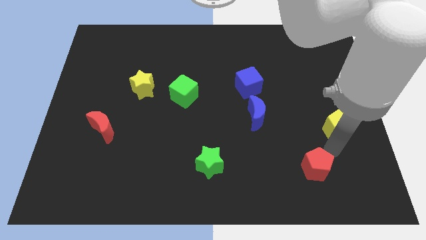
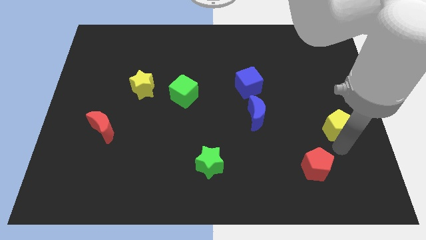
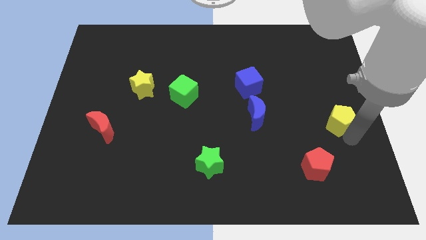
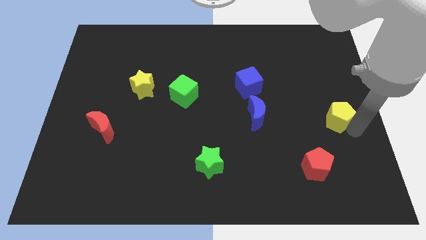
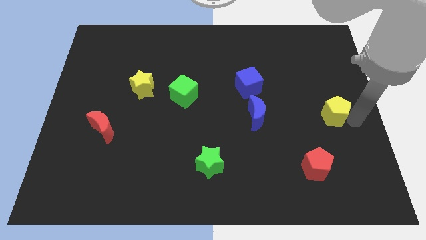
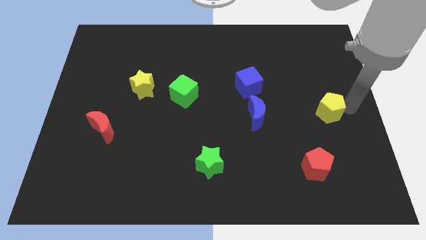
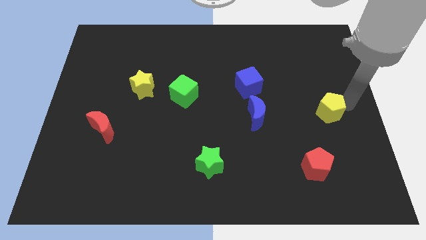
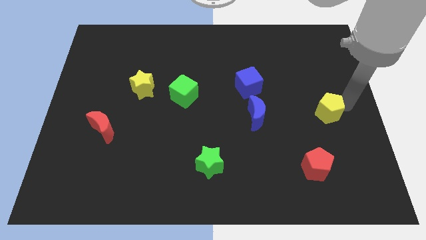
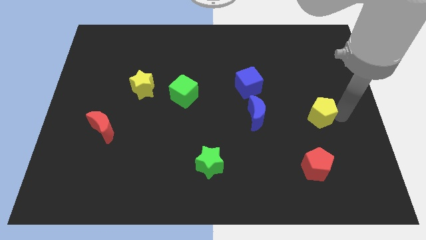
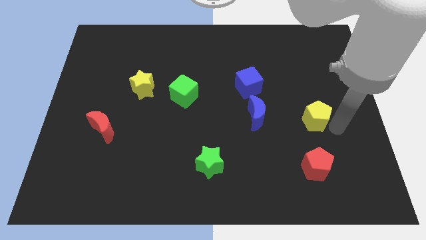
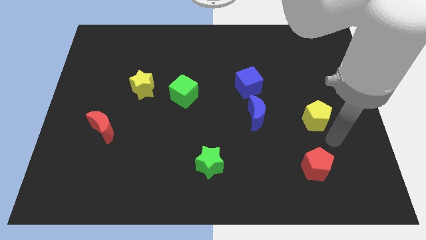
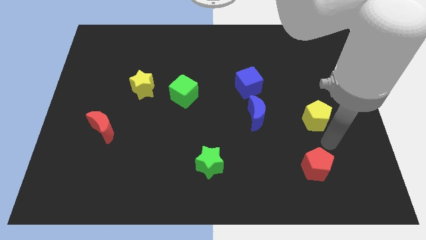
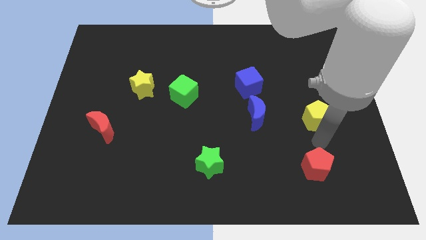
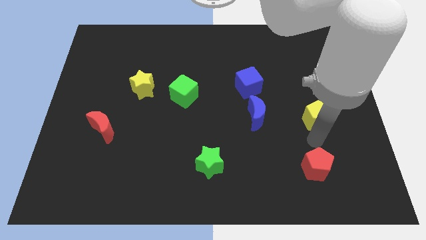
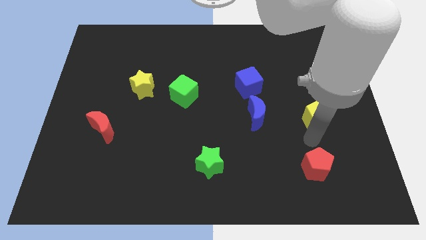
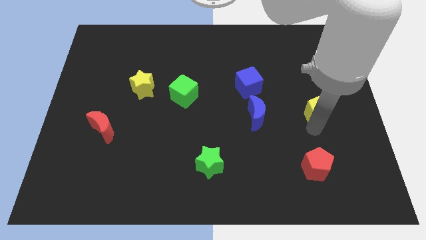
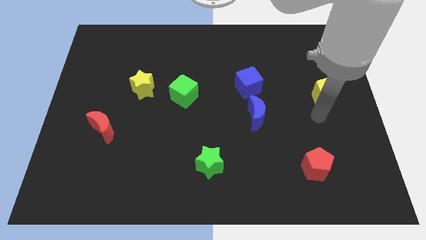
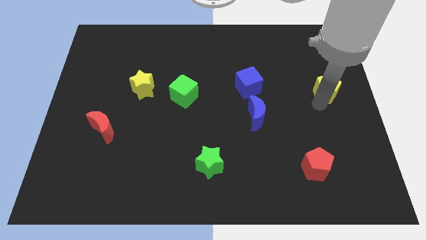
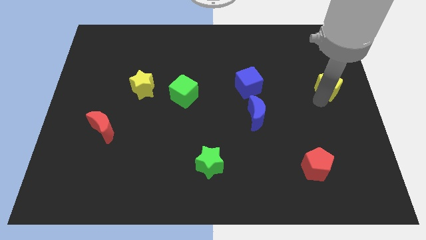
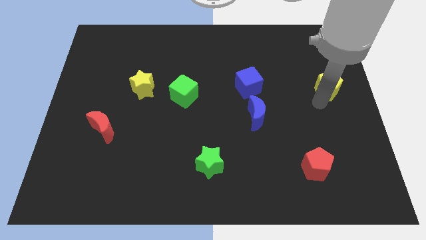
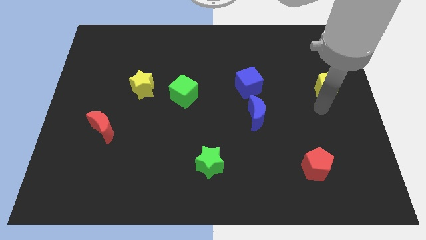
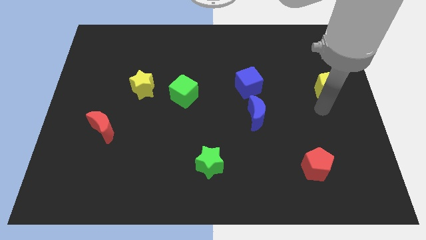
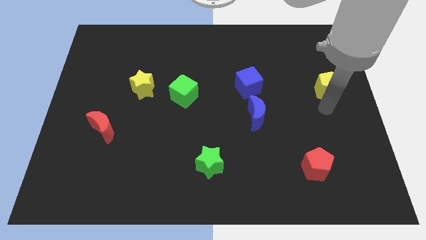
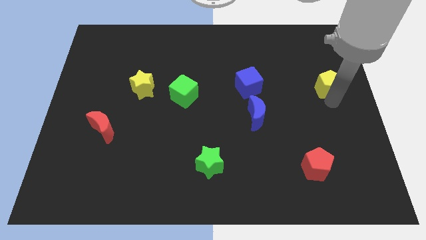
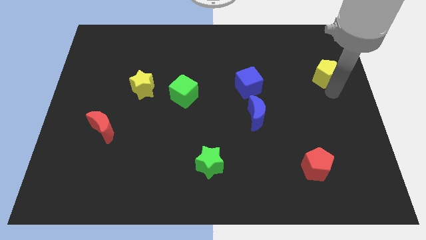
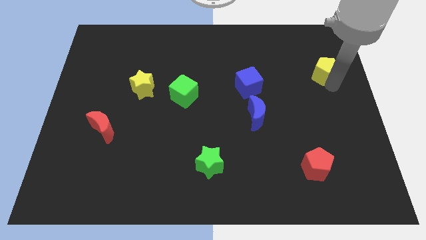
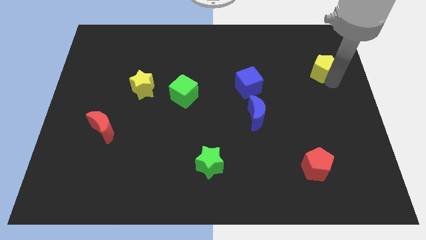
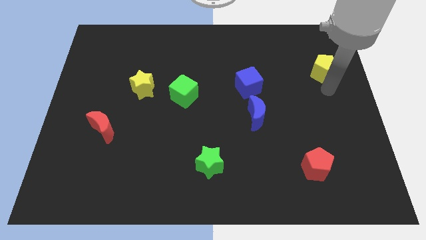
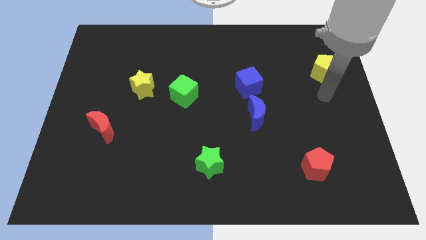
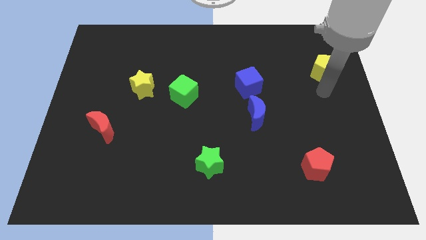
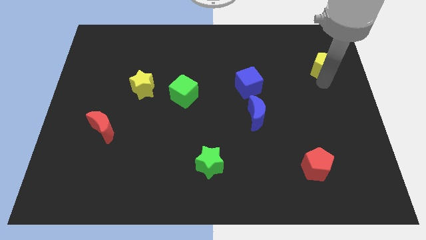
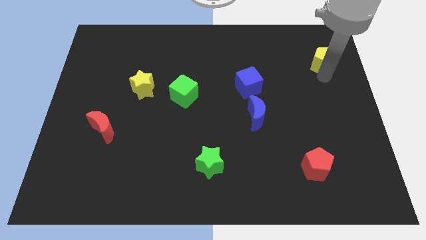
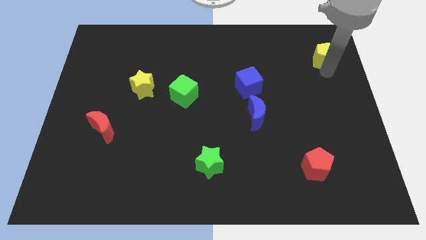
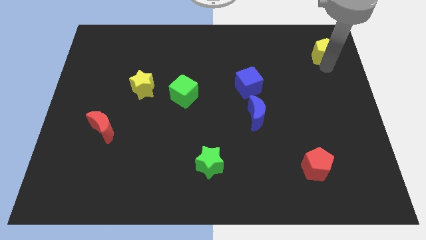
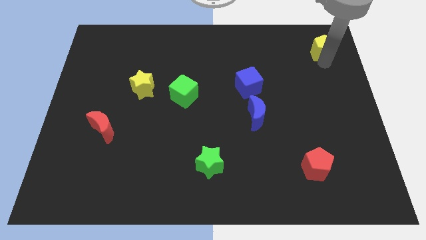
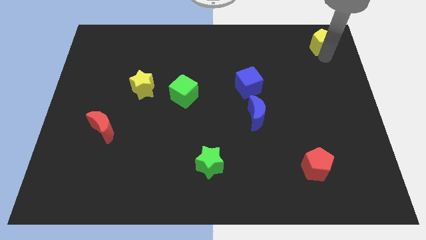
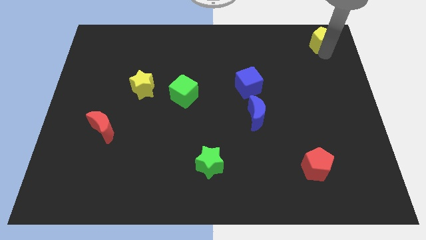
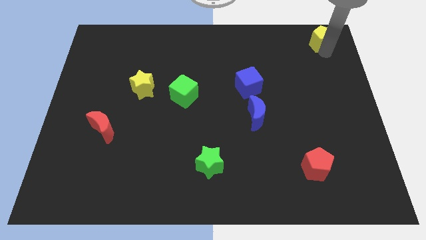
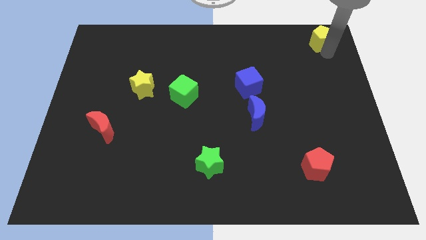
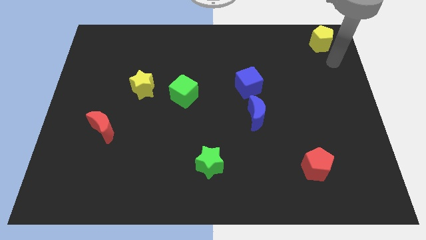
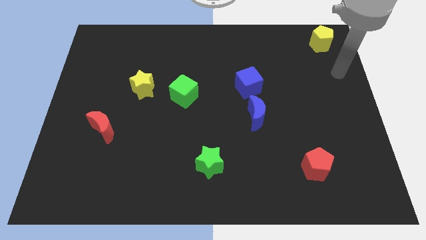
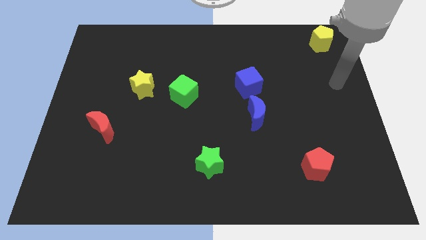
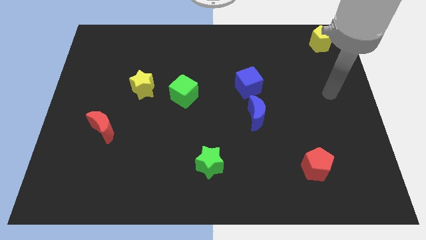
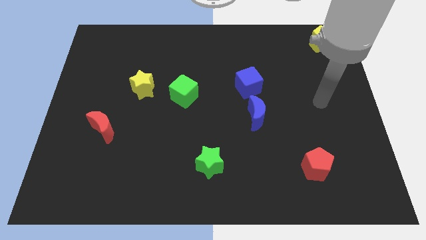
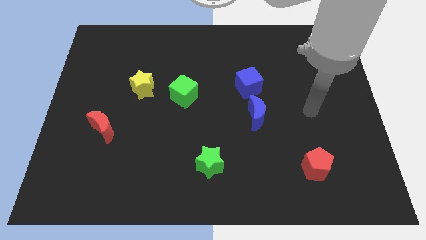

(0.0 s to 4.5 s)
place the yellow penntagon to the top right of the board

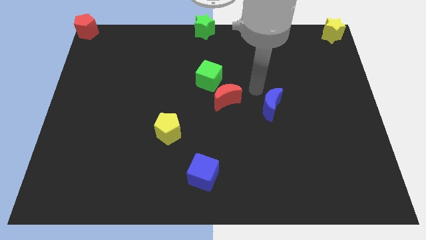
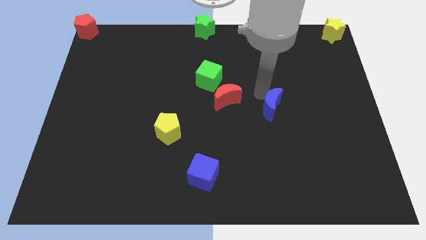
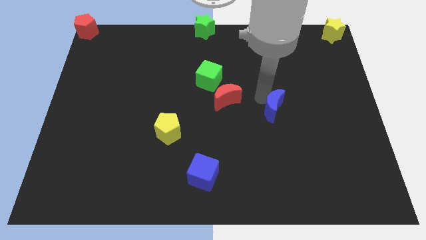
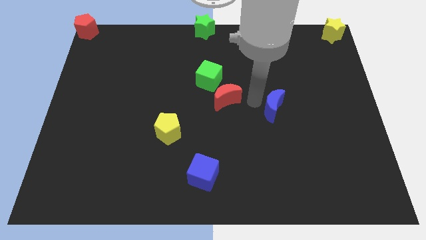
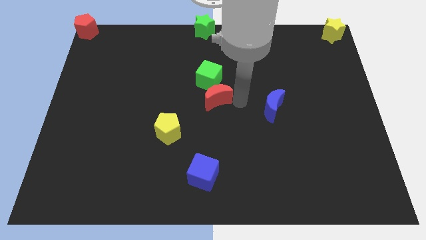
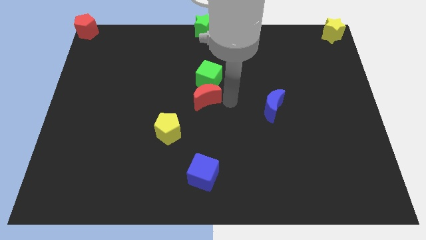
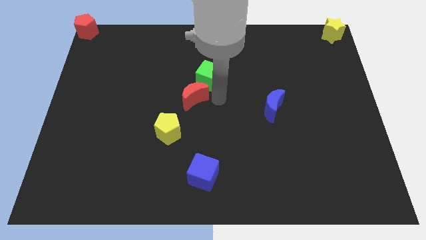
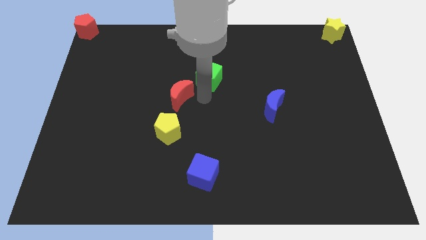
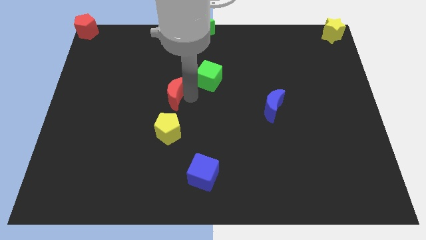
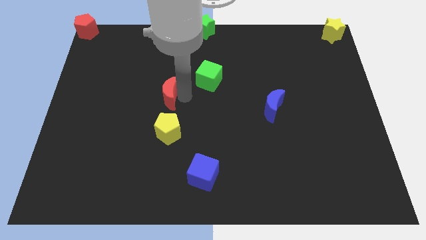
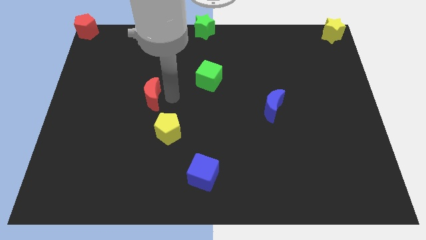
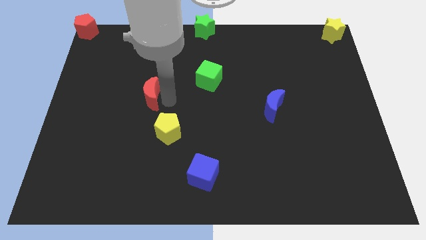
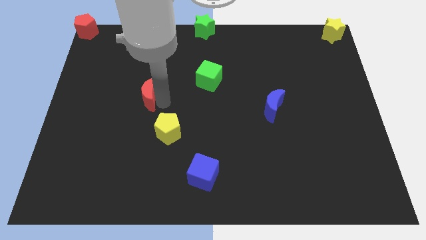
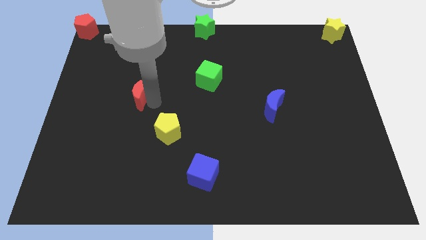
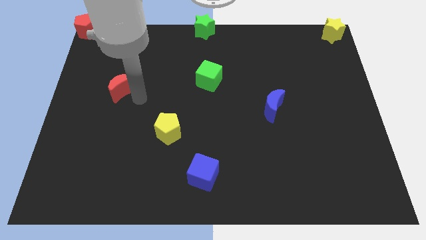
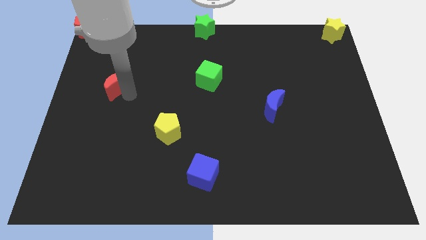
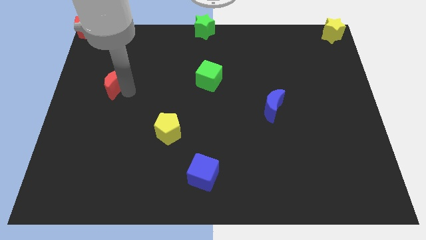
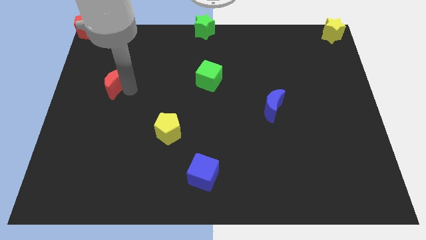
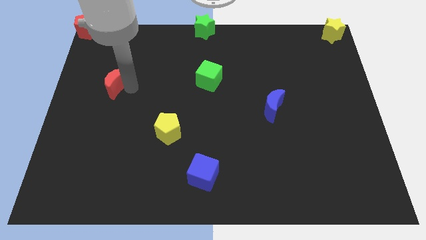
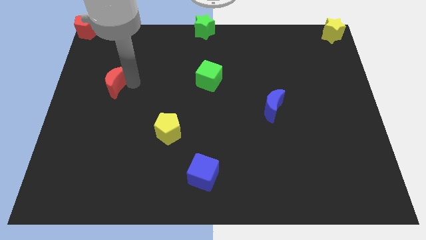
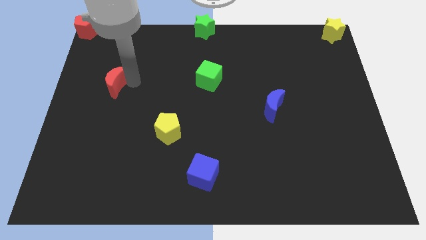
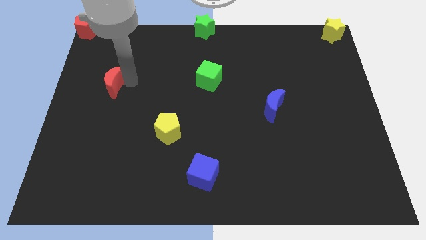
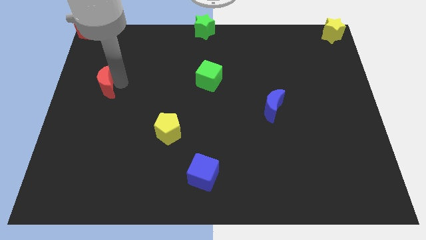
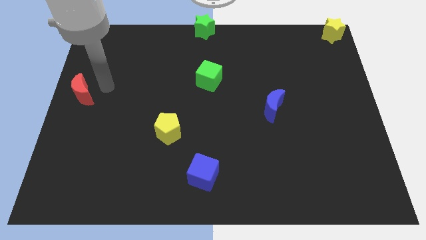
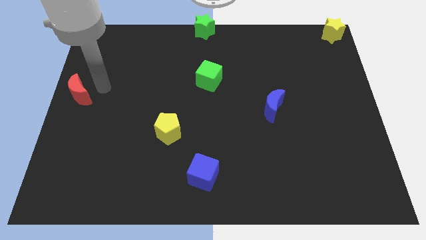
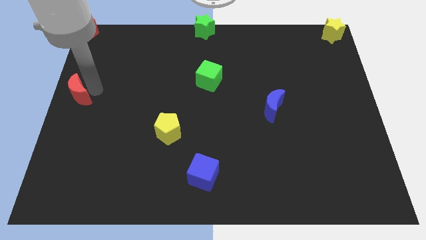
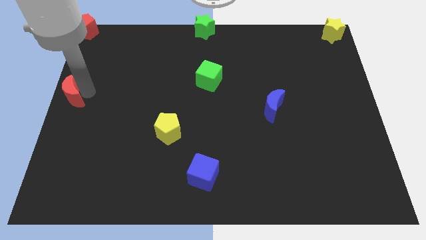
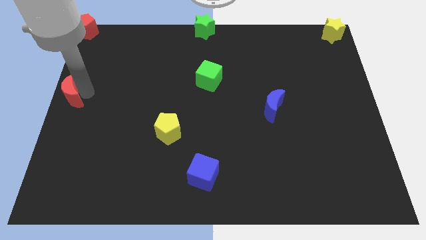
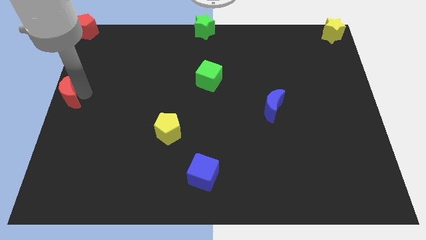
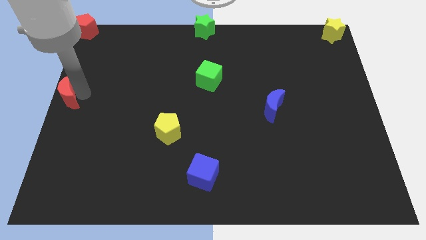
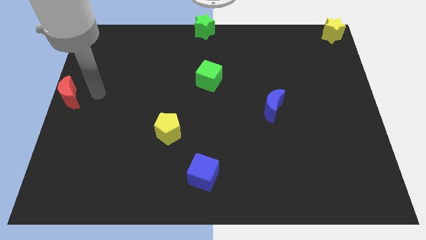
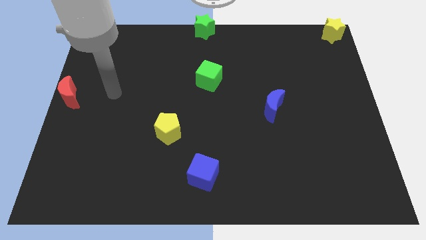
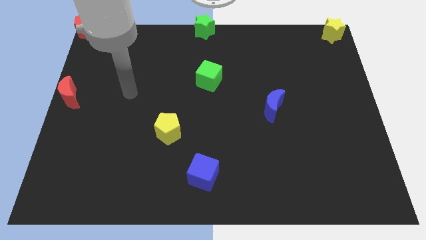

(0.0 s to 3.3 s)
place red crescent below red pentagon

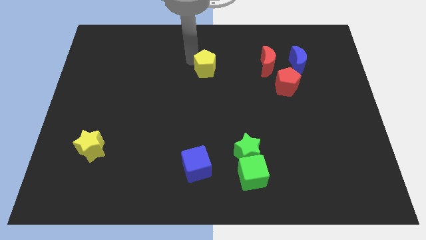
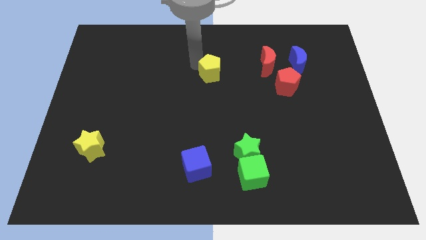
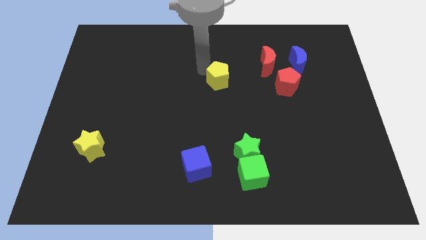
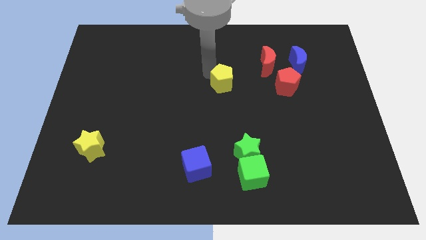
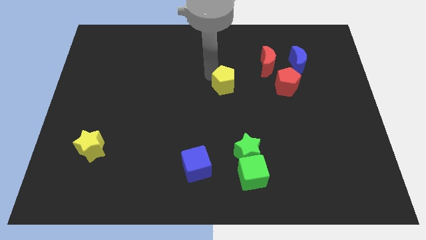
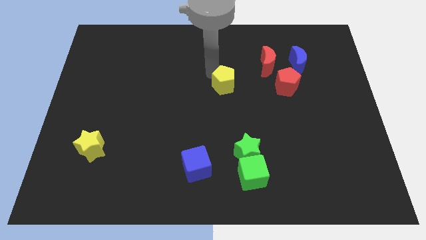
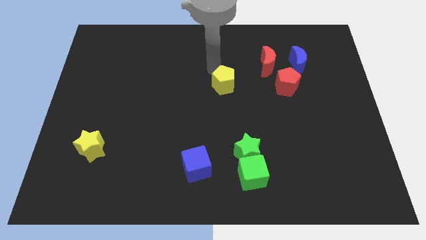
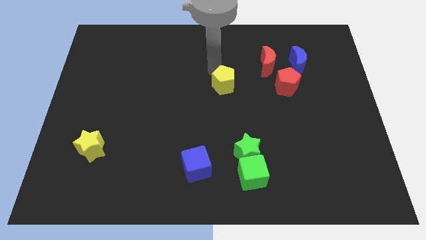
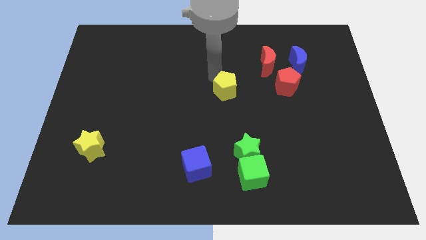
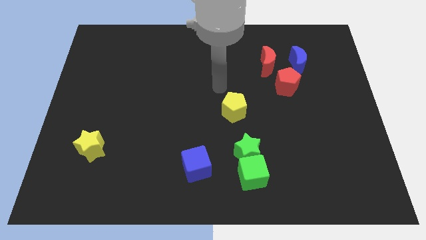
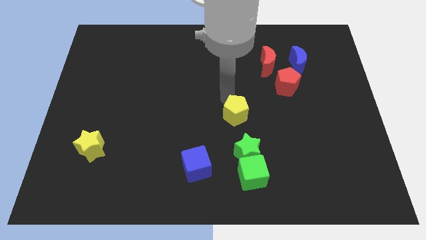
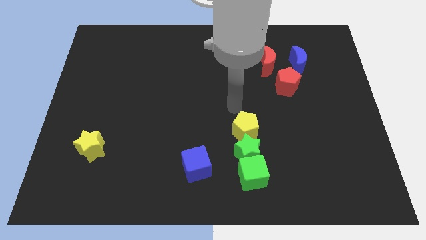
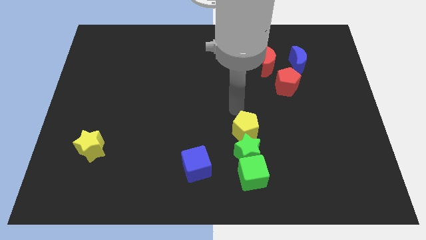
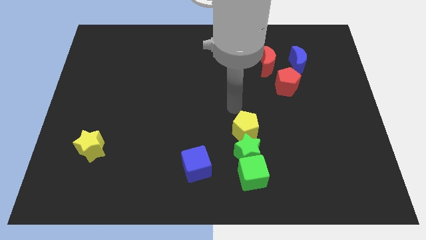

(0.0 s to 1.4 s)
place yellow pentagon to the top of the green star
